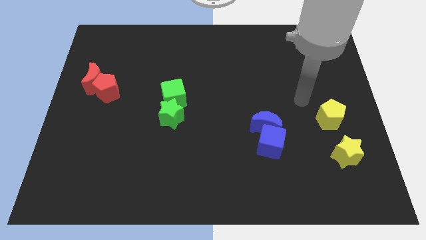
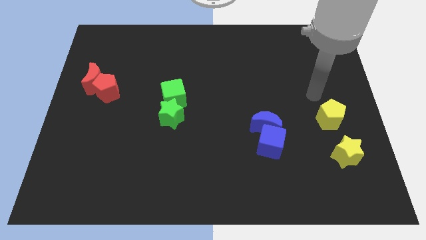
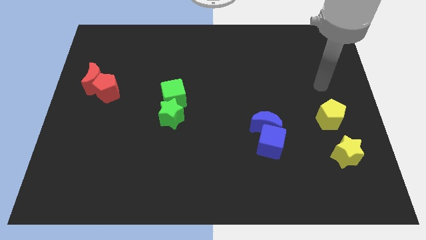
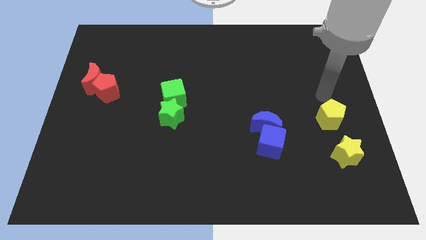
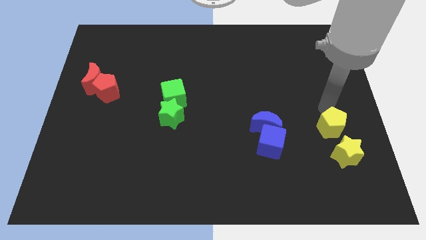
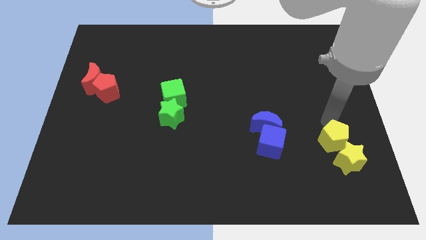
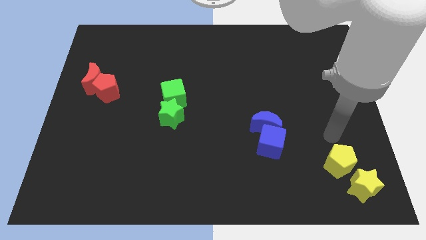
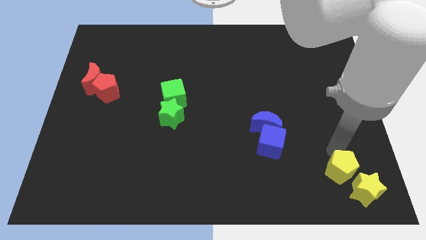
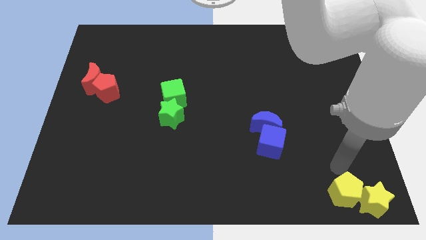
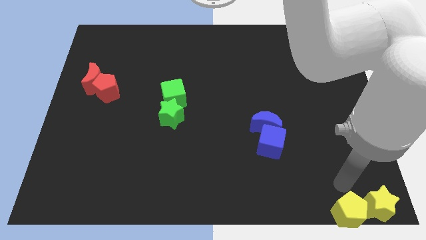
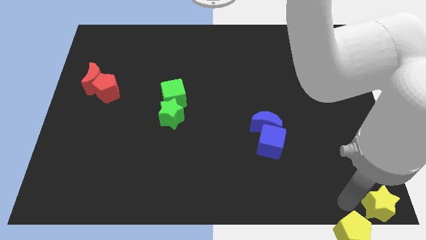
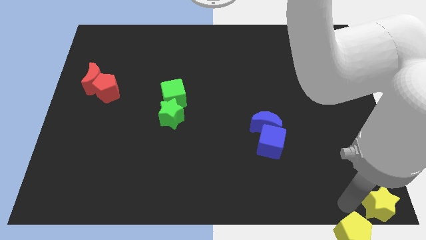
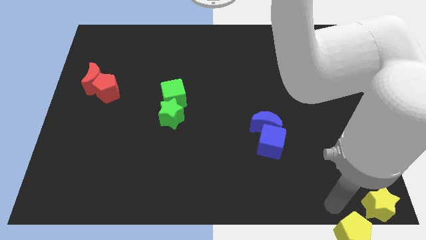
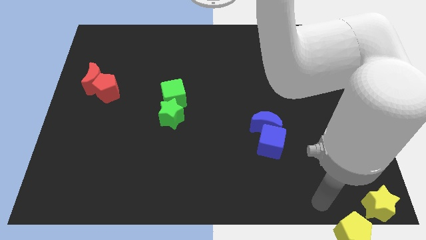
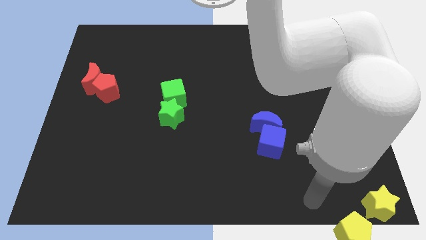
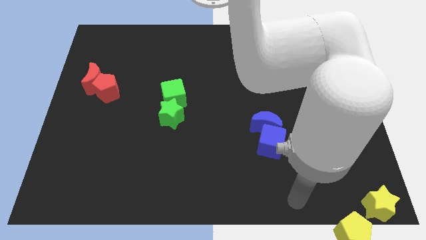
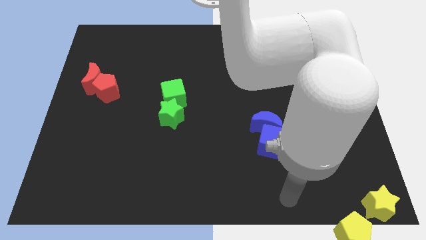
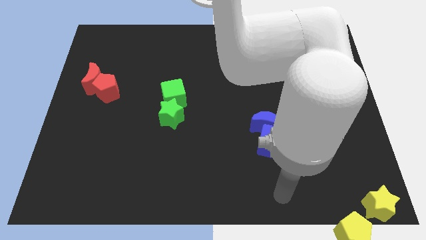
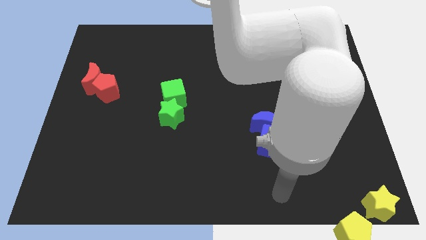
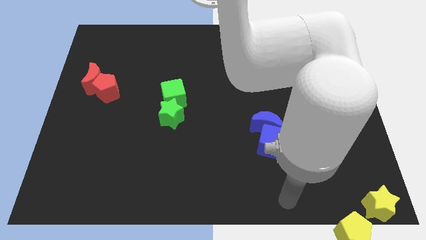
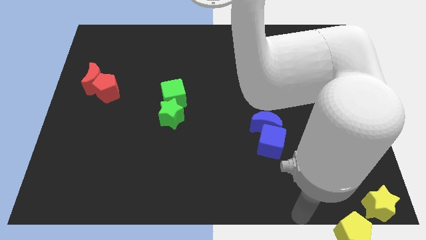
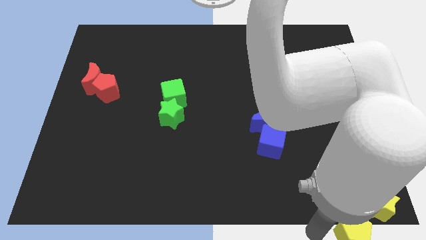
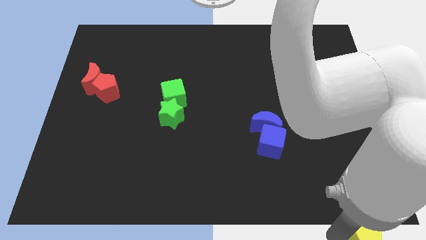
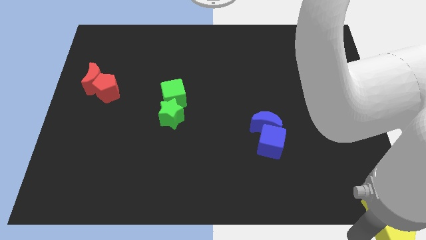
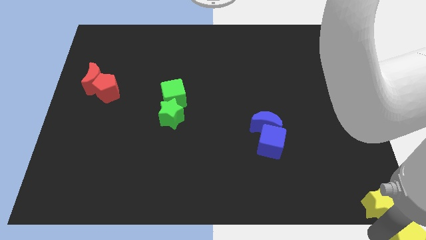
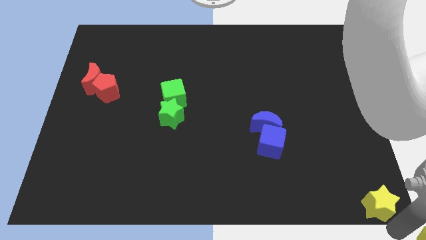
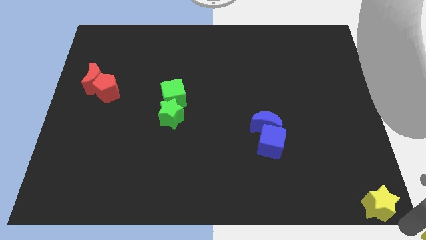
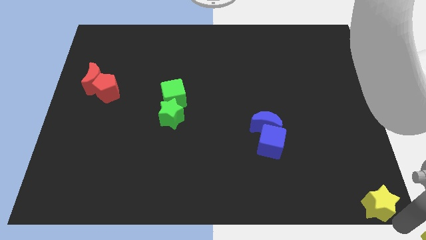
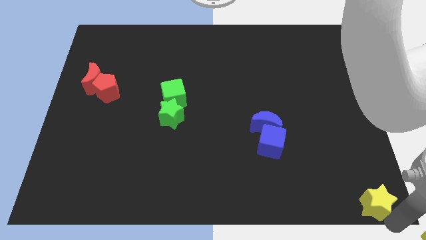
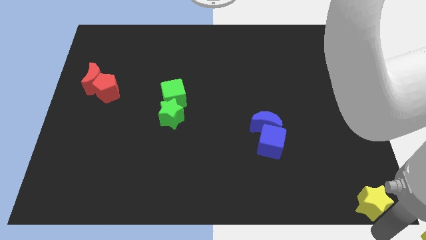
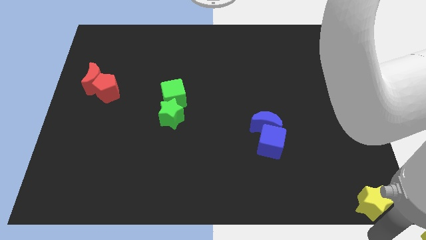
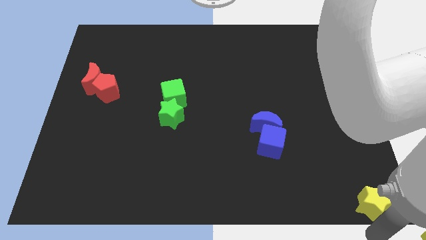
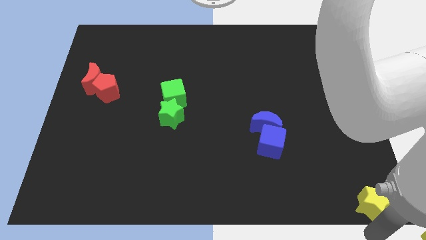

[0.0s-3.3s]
push the yellow pentagon to the bottom right corner

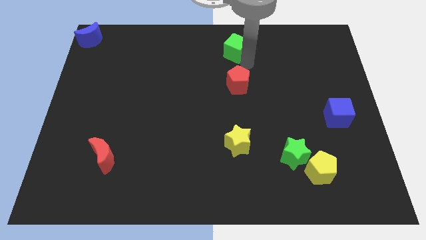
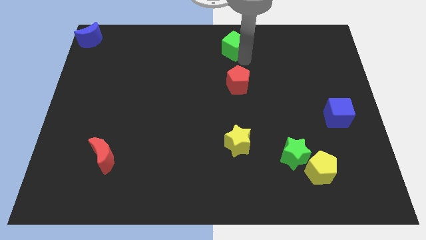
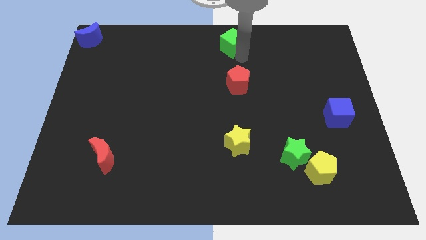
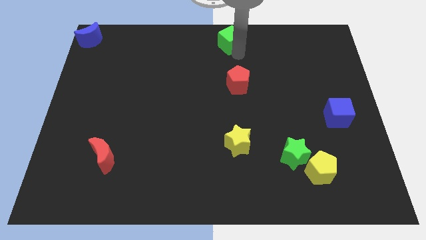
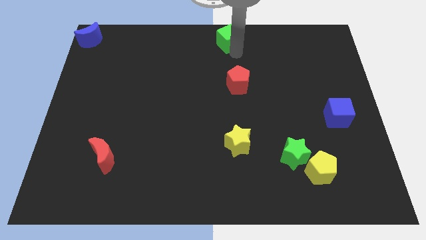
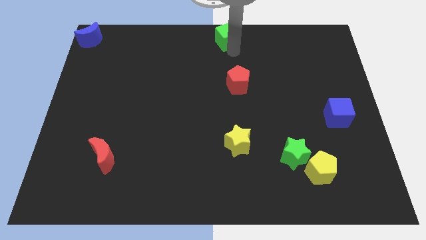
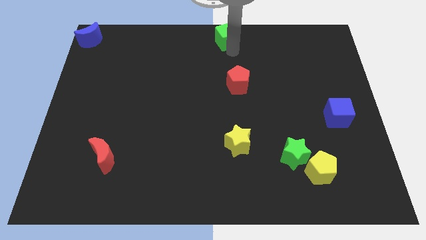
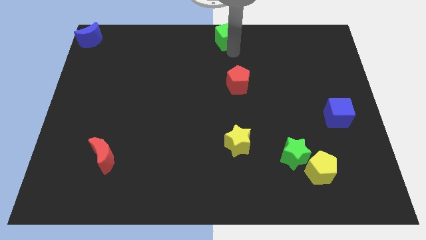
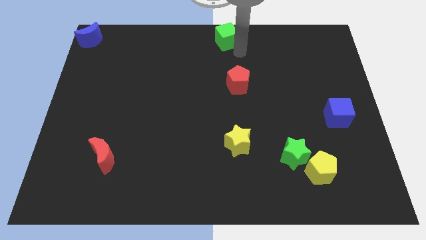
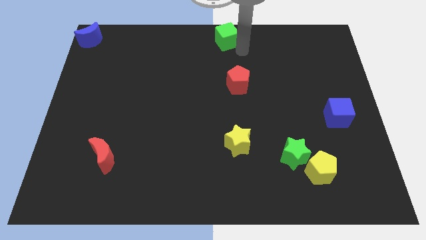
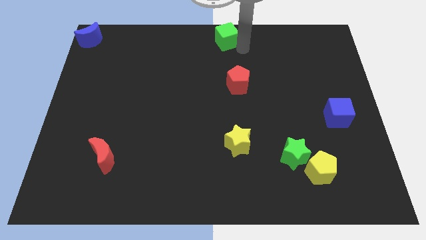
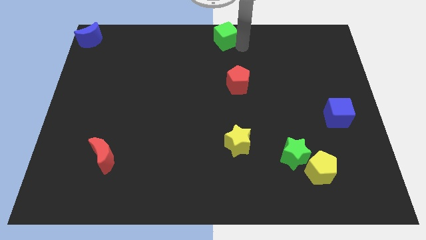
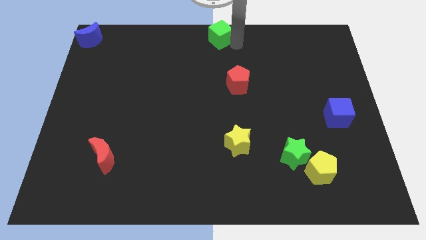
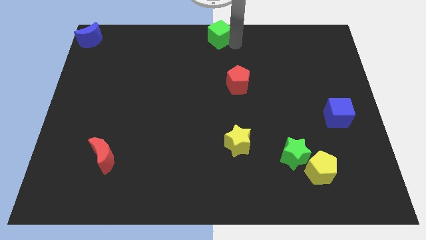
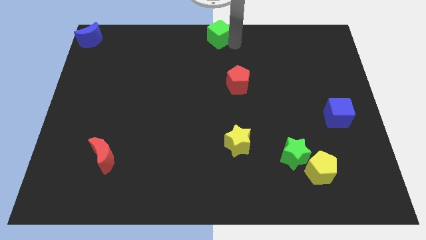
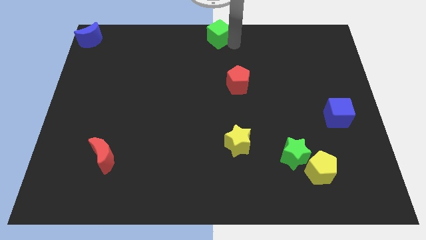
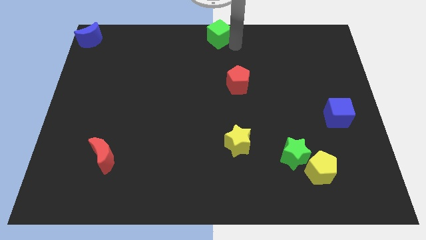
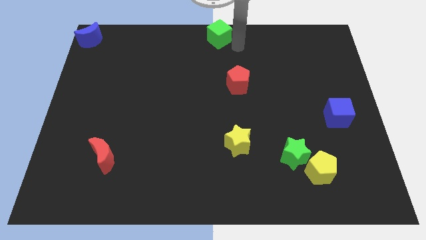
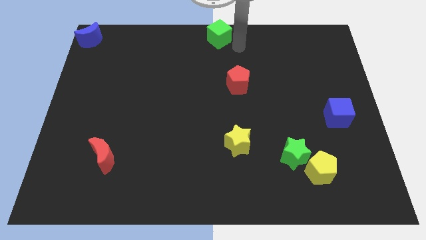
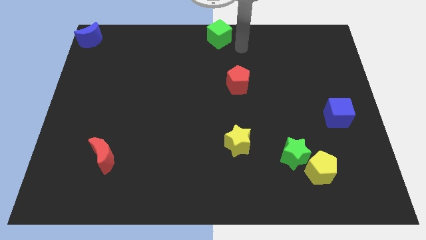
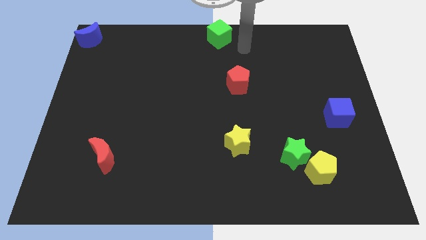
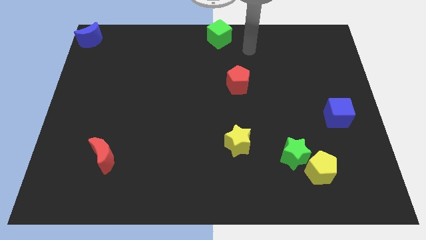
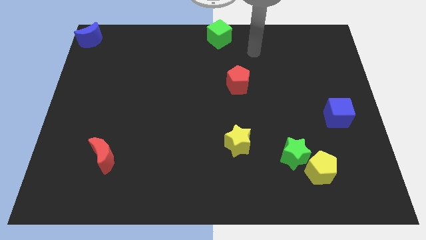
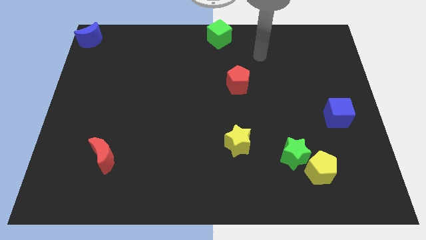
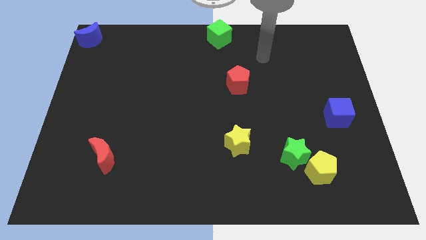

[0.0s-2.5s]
put the green cube at the top center of the board

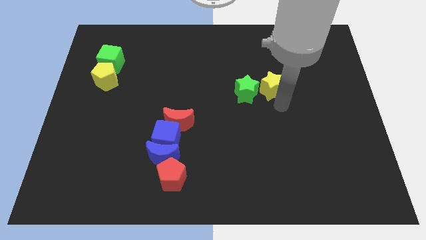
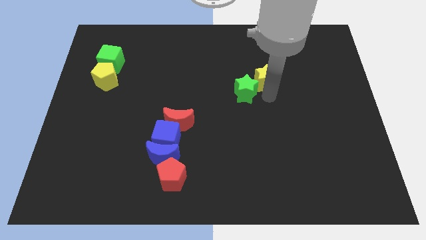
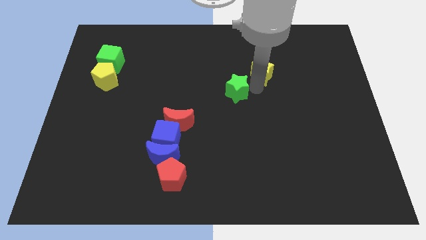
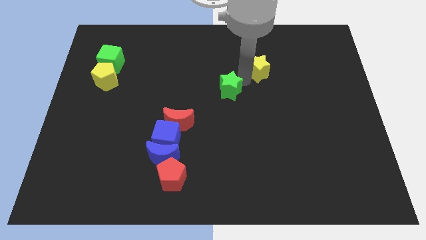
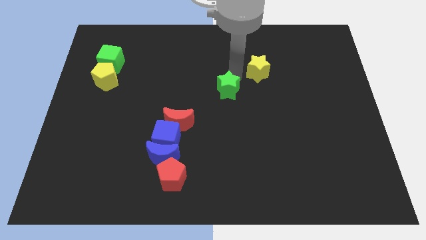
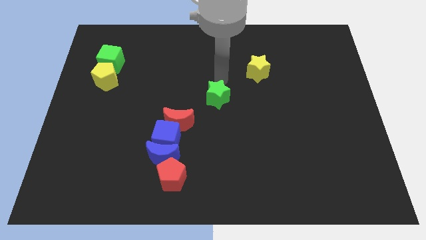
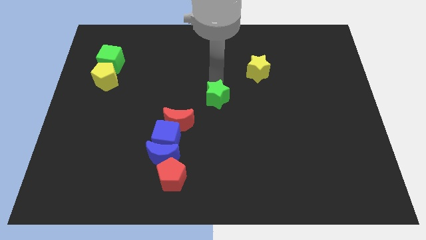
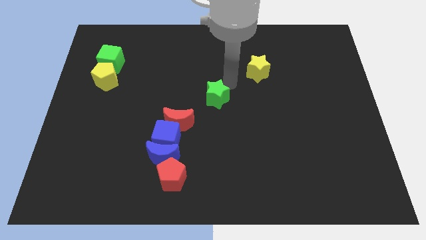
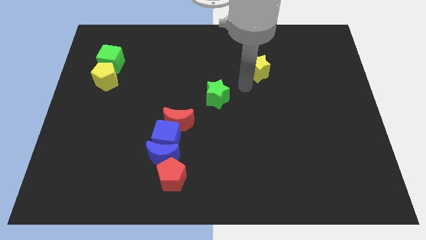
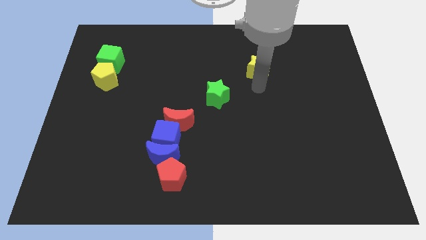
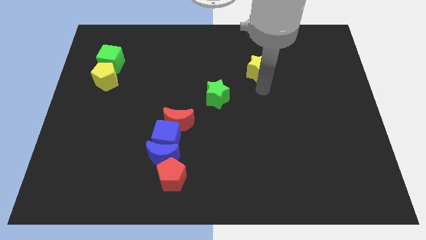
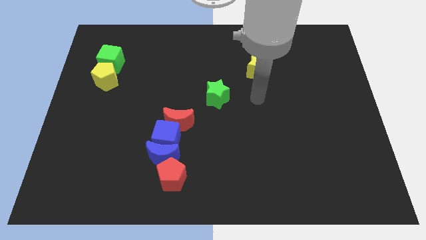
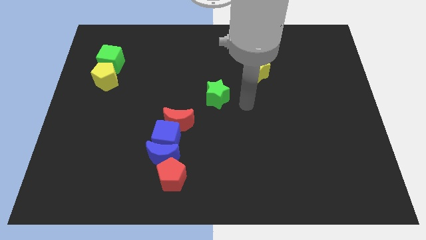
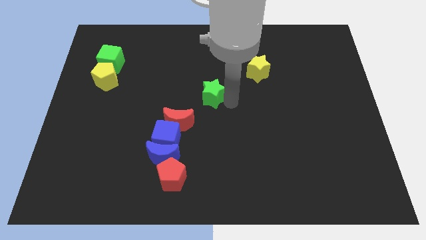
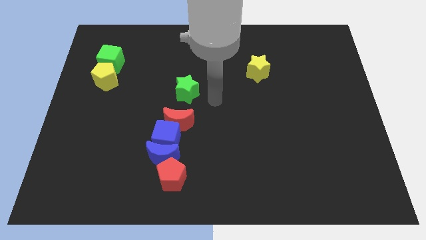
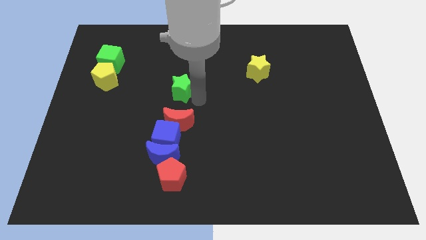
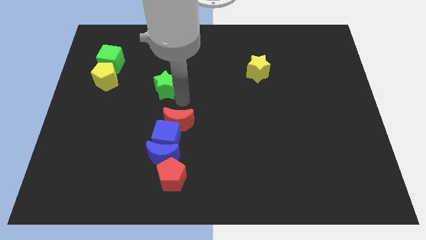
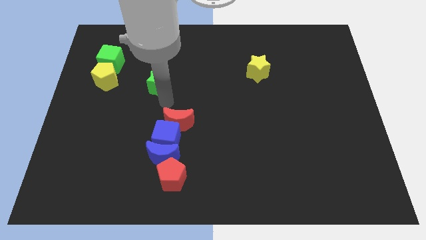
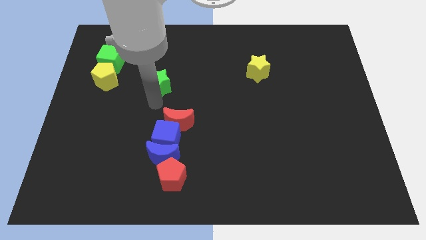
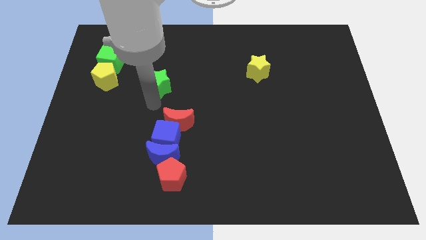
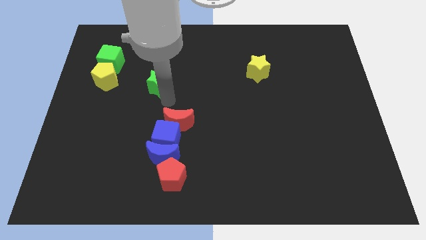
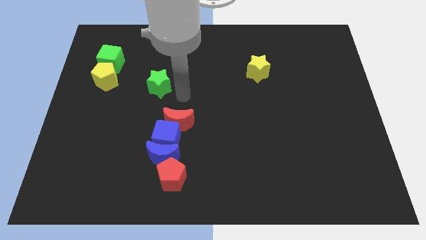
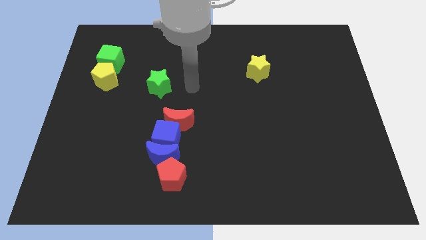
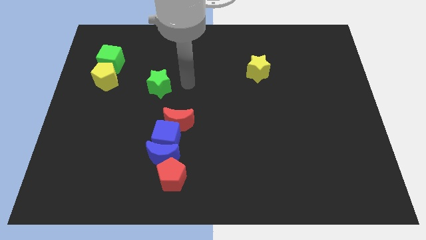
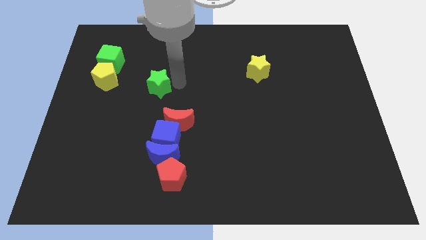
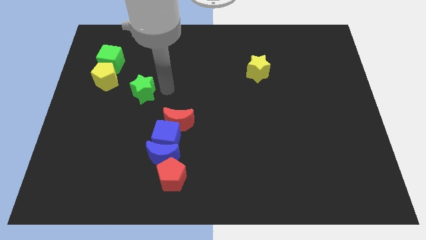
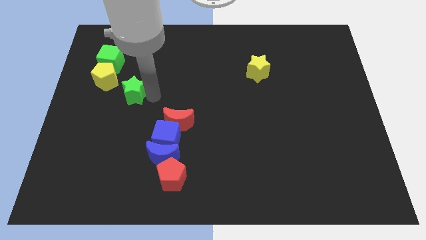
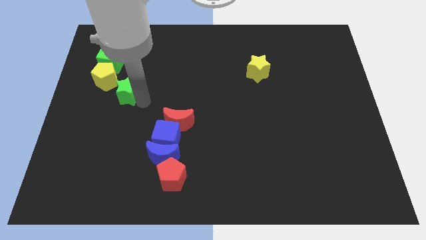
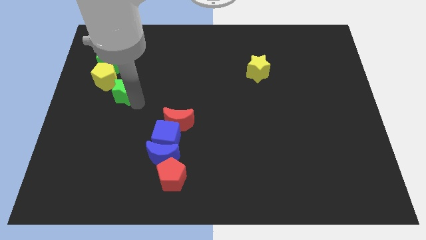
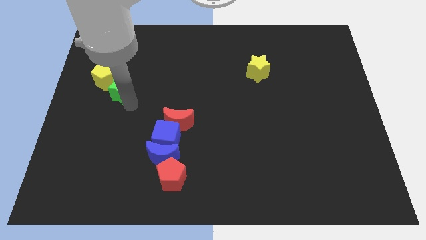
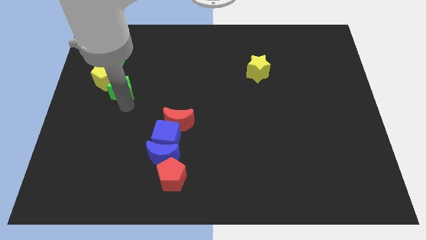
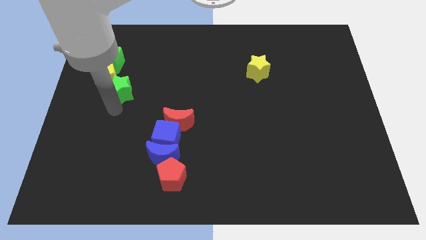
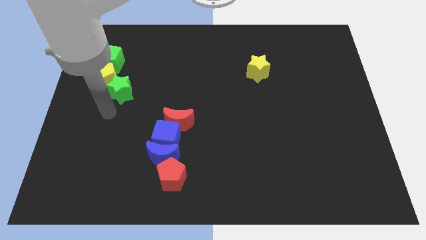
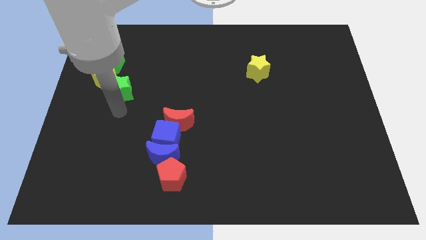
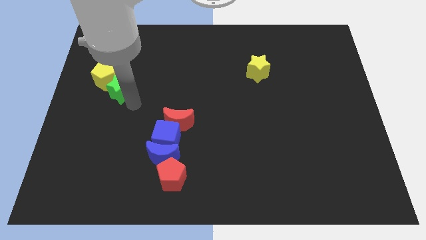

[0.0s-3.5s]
move the the green star into yellow pentagon
